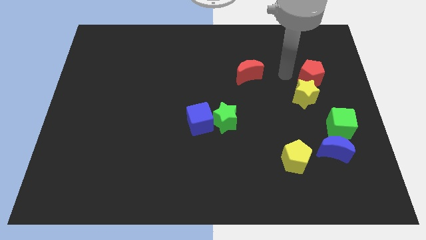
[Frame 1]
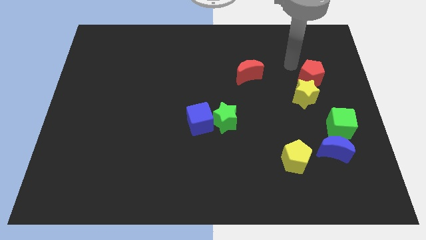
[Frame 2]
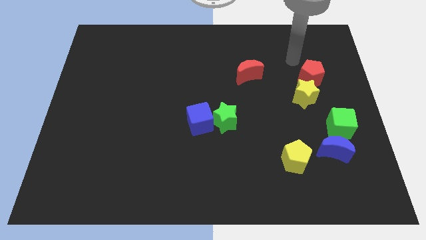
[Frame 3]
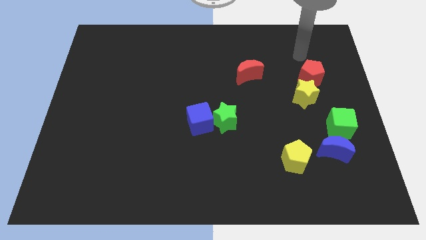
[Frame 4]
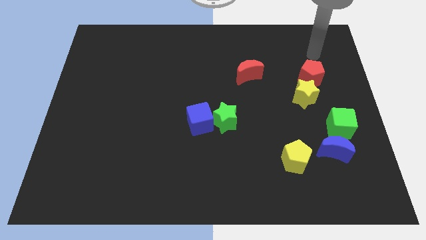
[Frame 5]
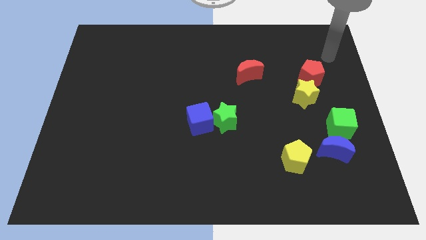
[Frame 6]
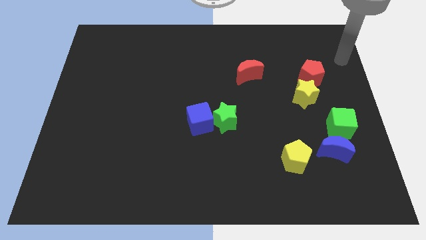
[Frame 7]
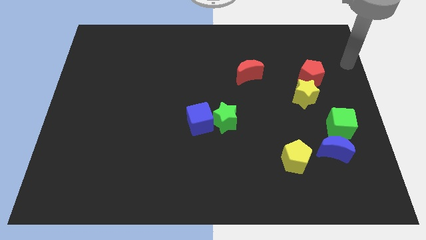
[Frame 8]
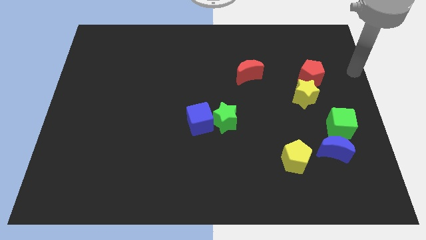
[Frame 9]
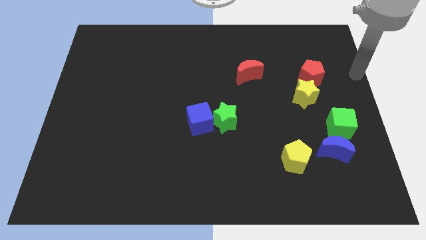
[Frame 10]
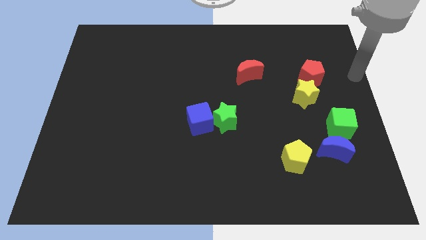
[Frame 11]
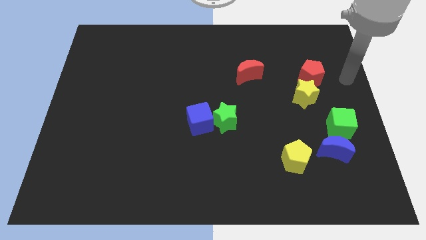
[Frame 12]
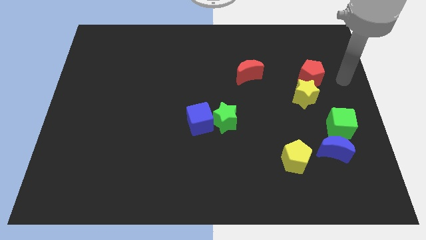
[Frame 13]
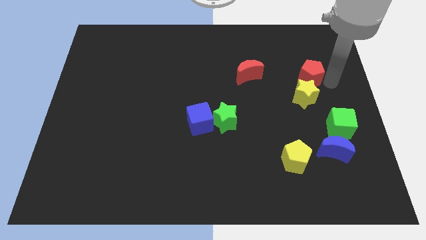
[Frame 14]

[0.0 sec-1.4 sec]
place your arm right to the red pentagon

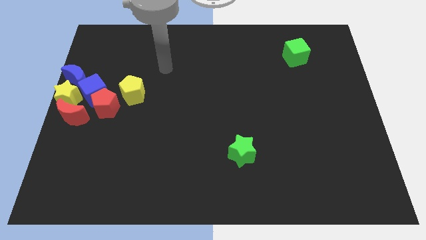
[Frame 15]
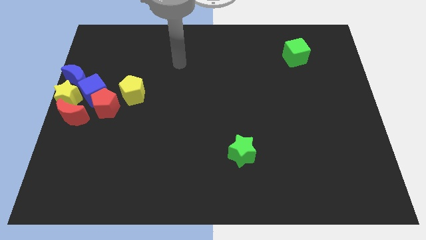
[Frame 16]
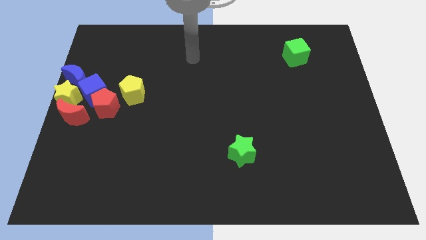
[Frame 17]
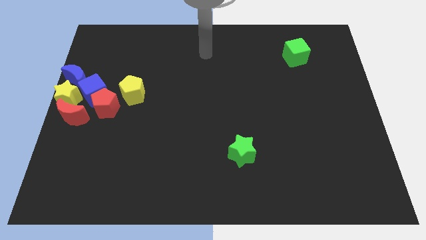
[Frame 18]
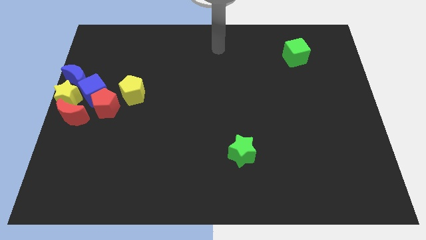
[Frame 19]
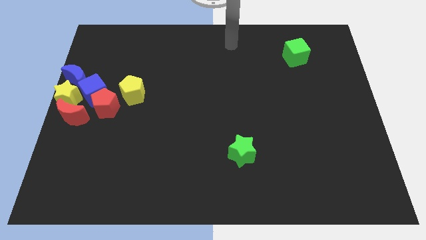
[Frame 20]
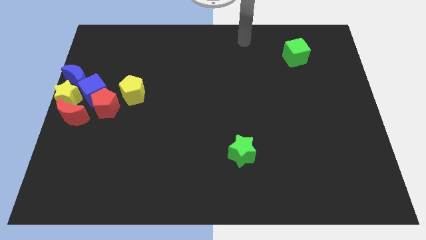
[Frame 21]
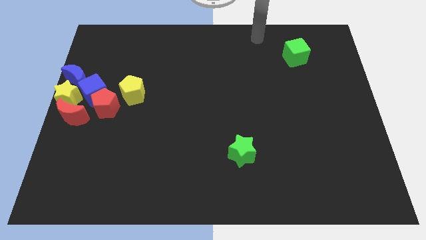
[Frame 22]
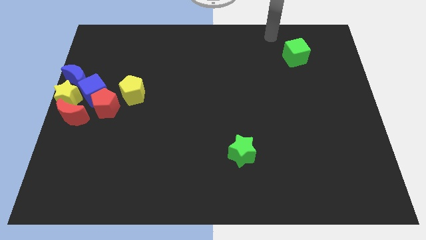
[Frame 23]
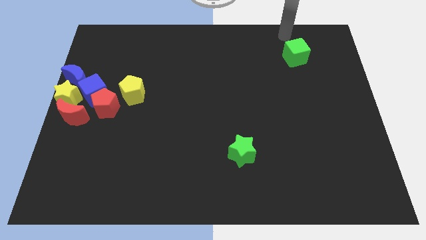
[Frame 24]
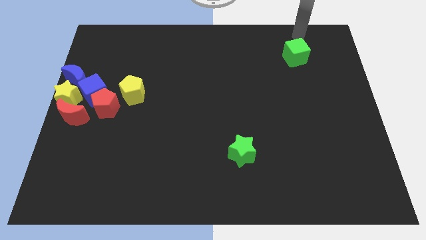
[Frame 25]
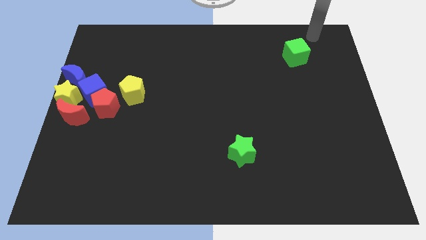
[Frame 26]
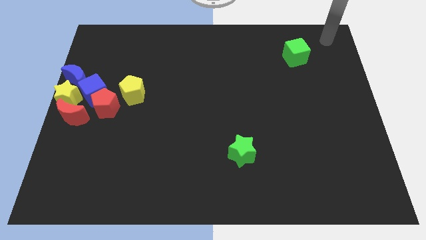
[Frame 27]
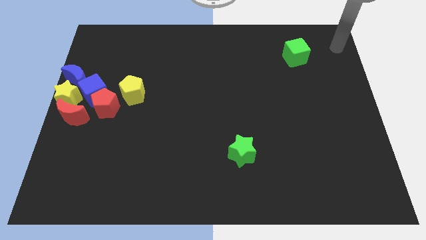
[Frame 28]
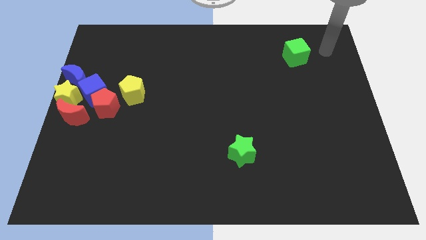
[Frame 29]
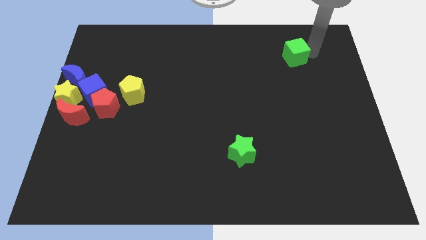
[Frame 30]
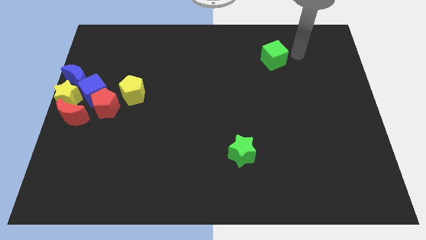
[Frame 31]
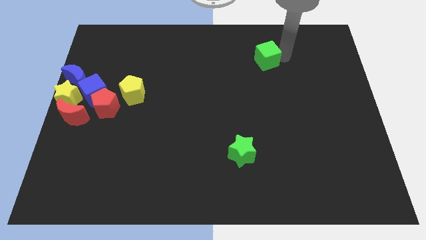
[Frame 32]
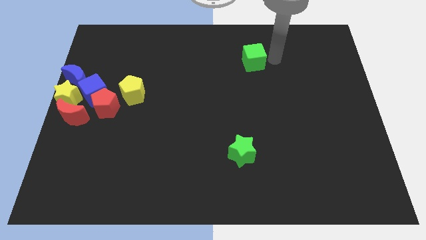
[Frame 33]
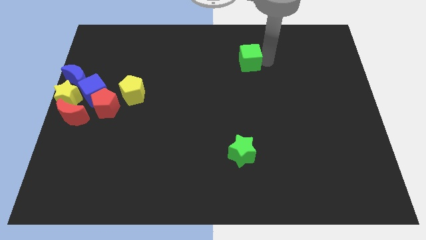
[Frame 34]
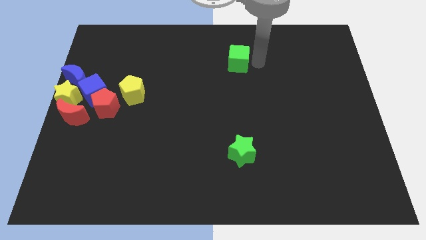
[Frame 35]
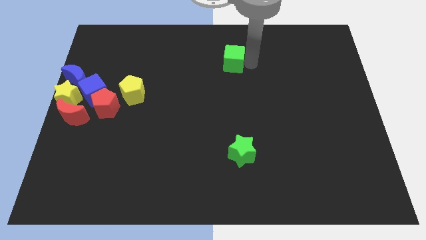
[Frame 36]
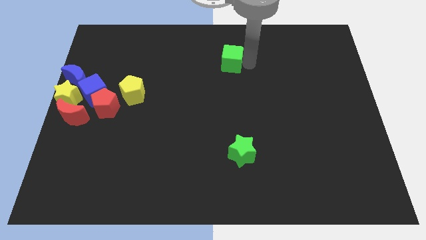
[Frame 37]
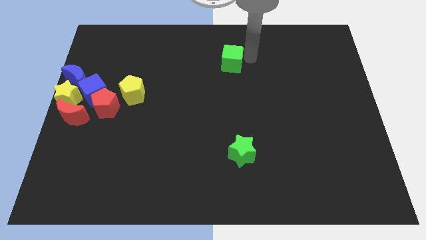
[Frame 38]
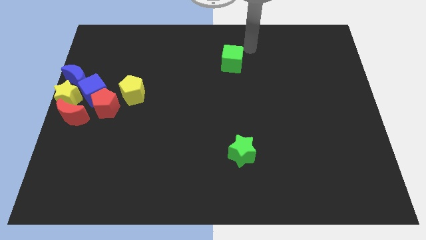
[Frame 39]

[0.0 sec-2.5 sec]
move the green cube towards the left side

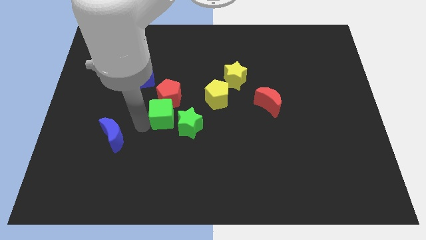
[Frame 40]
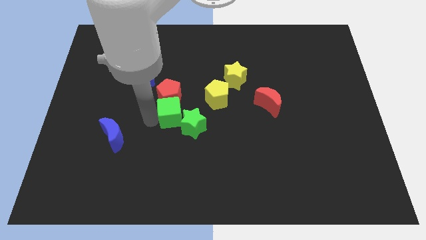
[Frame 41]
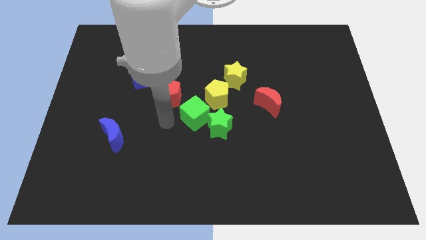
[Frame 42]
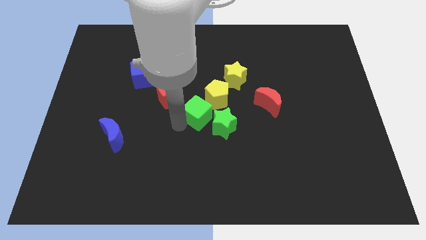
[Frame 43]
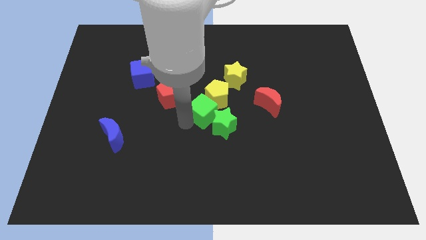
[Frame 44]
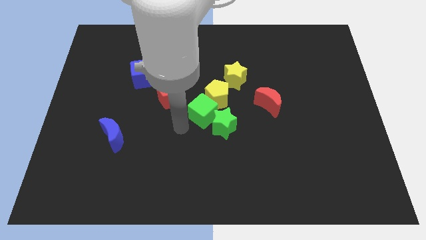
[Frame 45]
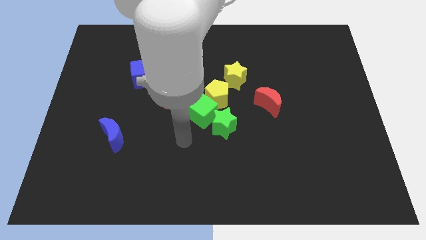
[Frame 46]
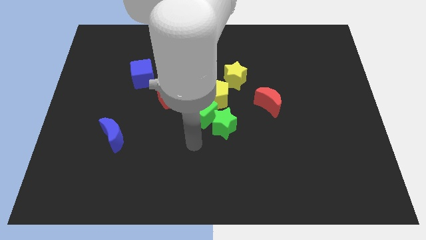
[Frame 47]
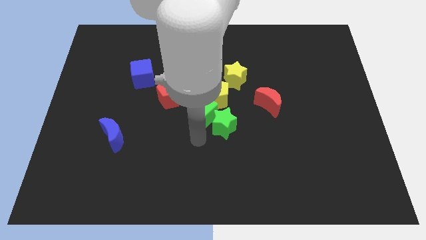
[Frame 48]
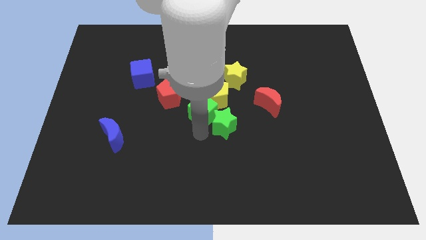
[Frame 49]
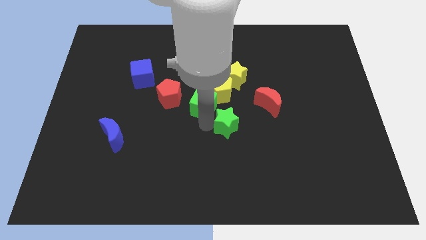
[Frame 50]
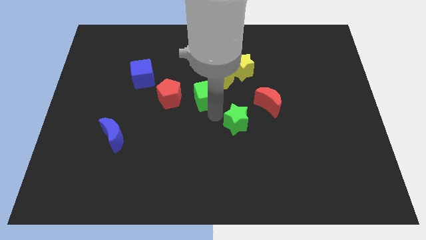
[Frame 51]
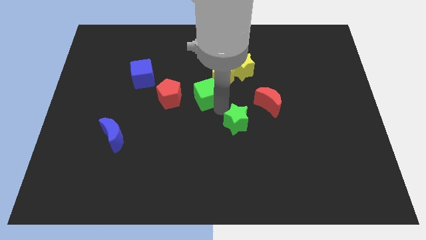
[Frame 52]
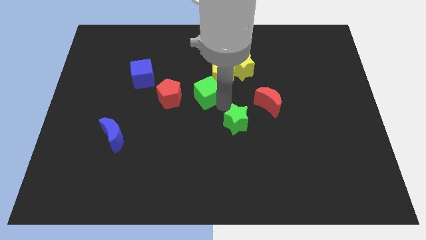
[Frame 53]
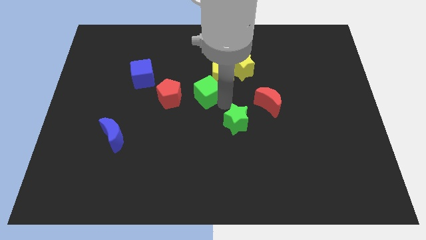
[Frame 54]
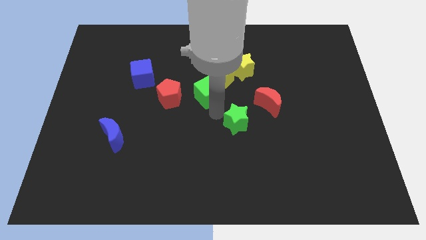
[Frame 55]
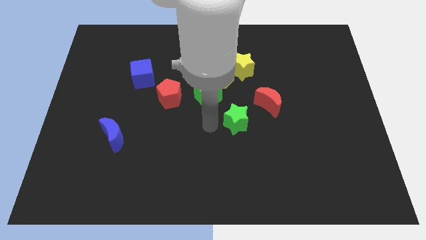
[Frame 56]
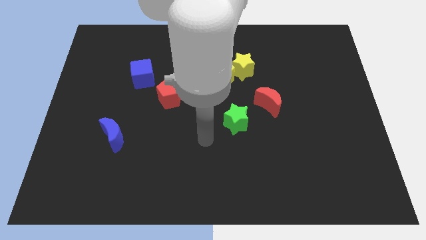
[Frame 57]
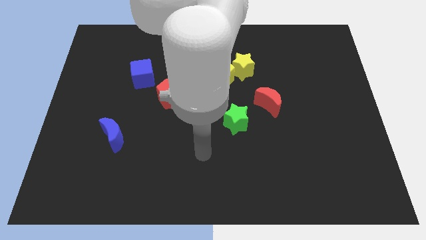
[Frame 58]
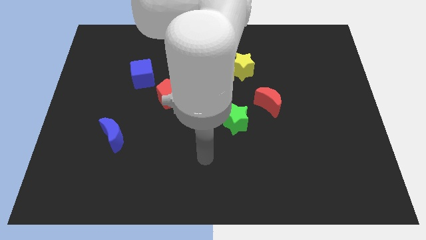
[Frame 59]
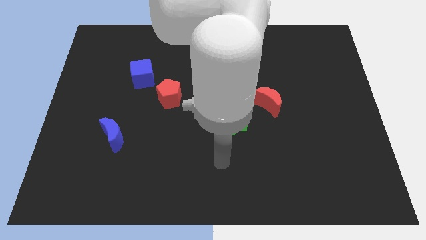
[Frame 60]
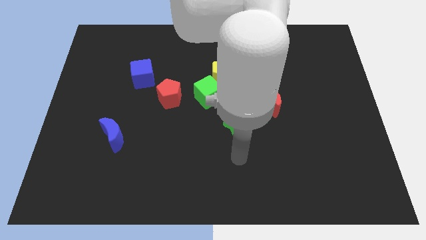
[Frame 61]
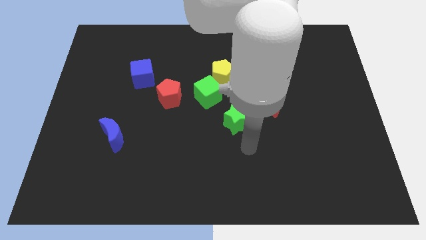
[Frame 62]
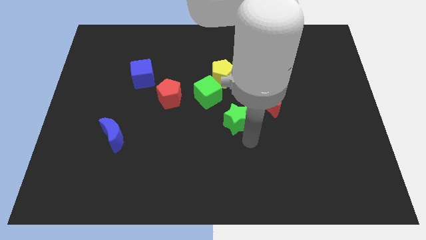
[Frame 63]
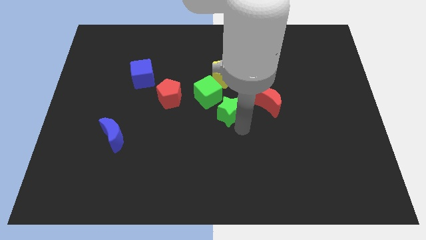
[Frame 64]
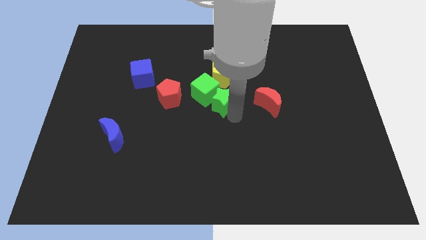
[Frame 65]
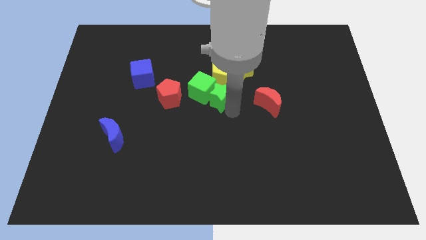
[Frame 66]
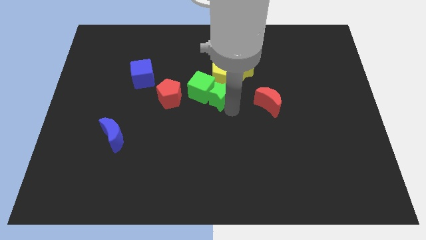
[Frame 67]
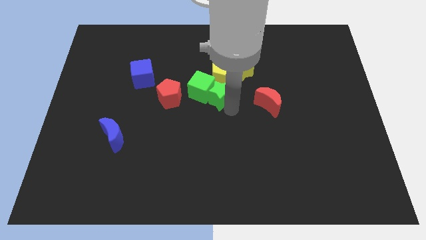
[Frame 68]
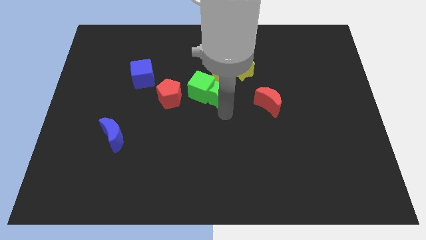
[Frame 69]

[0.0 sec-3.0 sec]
move the green color blocks into the yellow pentagon

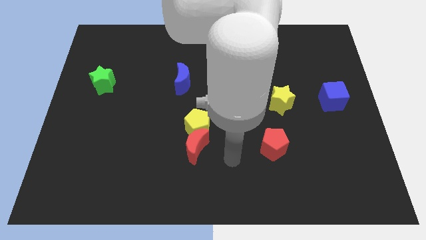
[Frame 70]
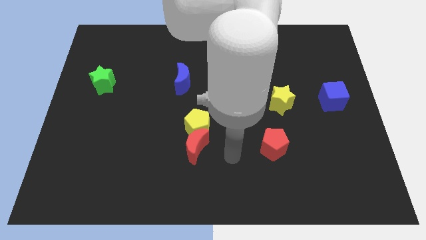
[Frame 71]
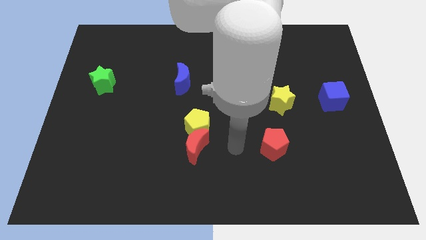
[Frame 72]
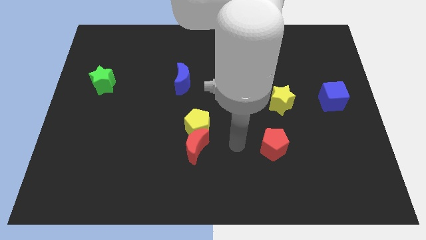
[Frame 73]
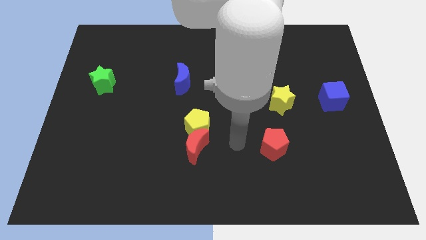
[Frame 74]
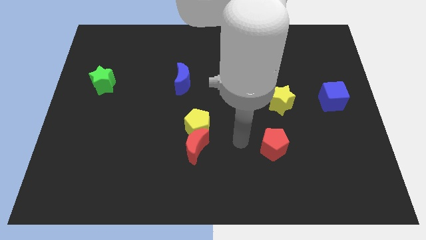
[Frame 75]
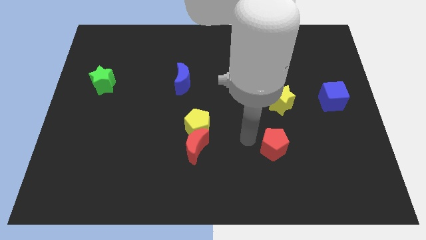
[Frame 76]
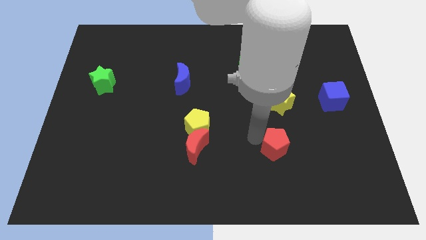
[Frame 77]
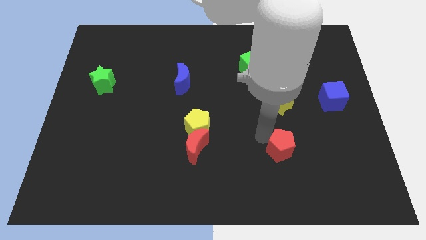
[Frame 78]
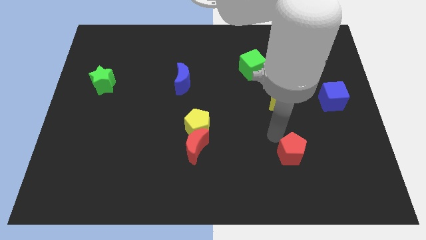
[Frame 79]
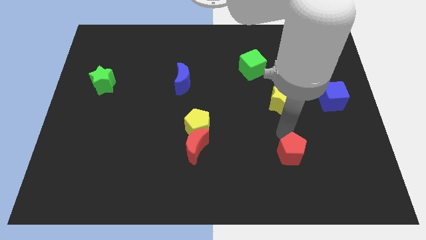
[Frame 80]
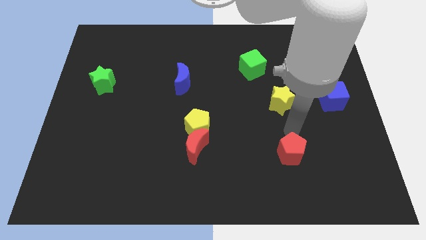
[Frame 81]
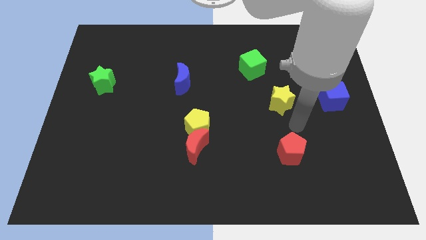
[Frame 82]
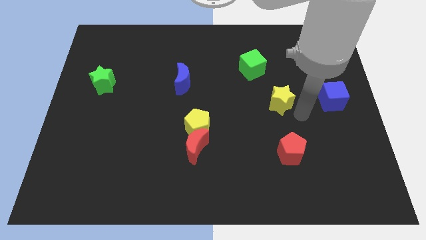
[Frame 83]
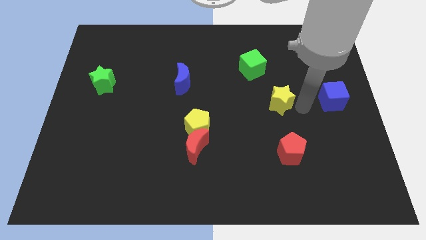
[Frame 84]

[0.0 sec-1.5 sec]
push the red pentagon slightly to the right

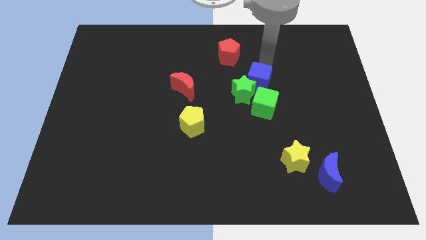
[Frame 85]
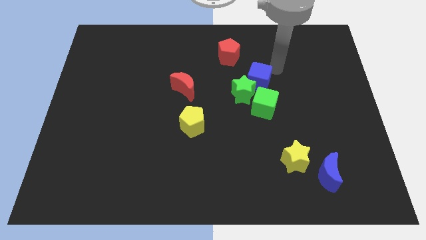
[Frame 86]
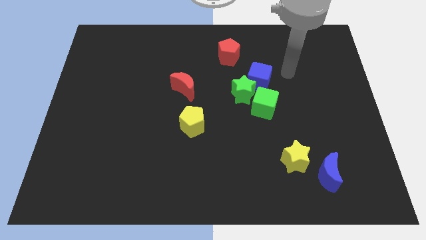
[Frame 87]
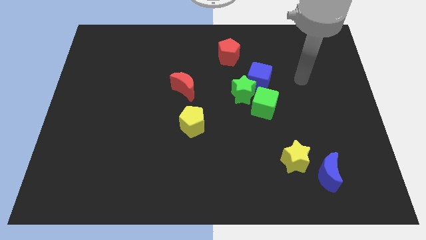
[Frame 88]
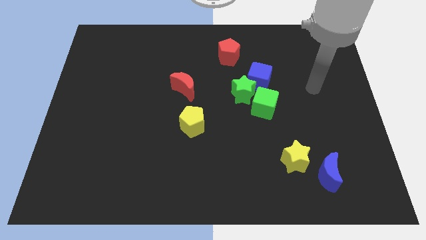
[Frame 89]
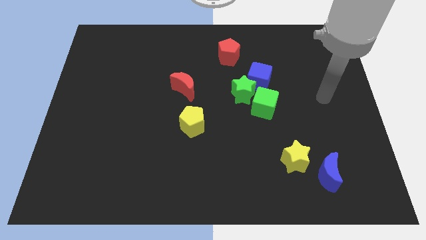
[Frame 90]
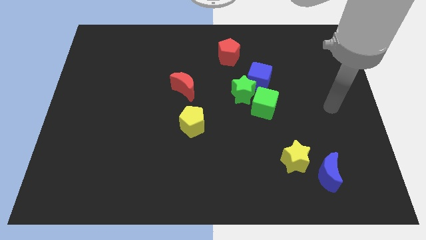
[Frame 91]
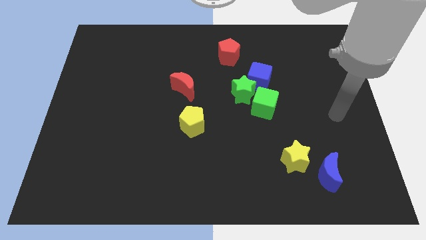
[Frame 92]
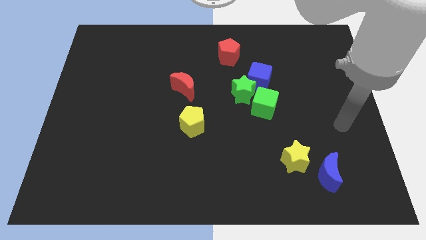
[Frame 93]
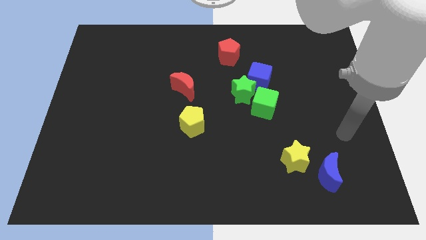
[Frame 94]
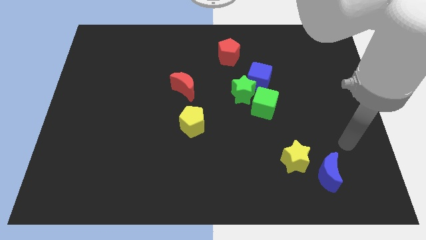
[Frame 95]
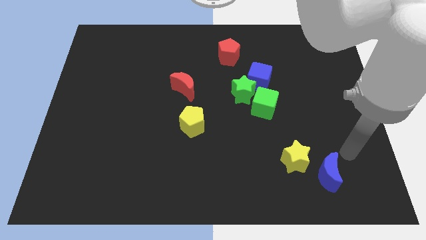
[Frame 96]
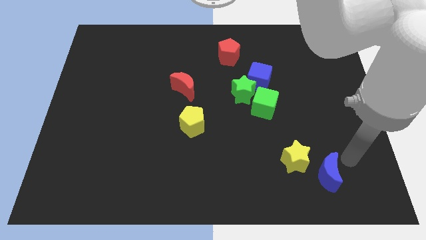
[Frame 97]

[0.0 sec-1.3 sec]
move your arm towards the blue moon
